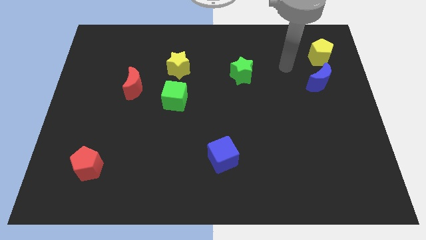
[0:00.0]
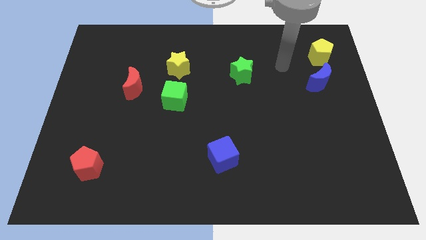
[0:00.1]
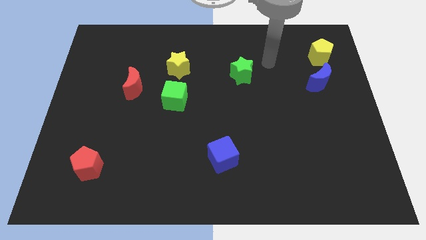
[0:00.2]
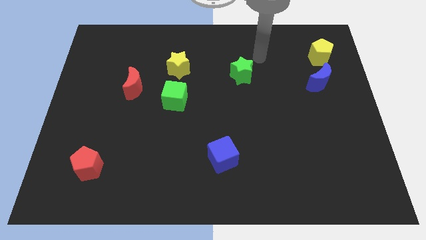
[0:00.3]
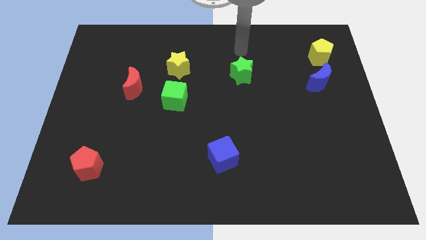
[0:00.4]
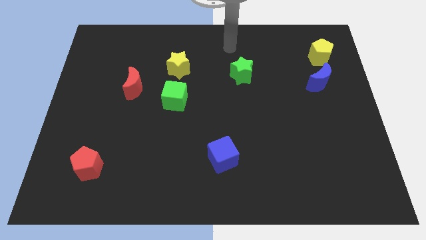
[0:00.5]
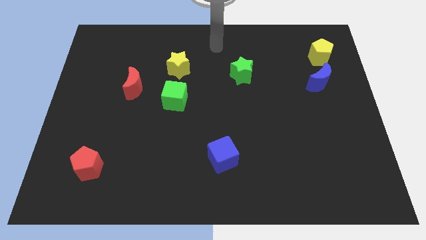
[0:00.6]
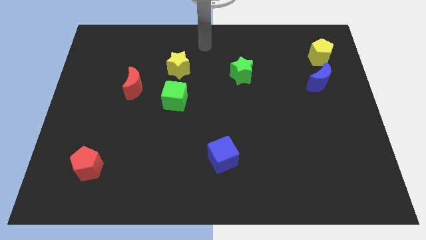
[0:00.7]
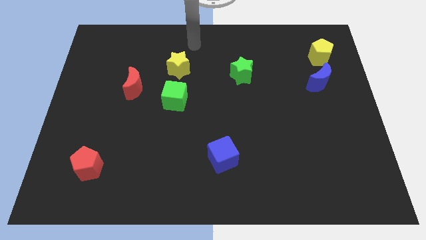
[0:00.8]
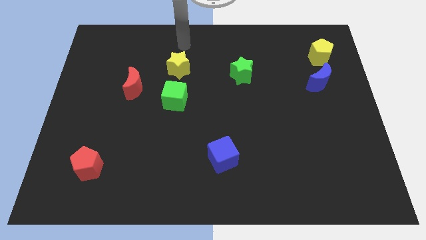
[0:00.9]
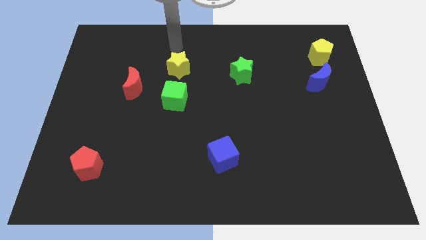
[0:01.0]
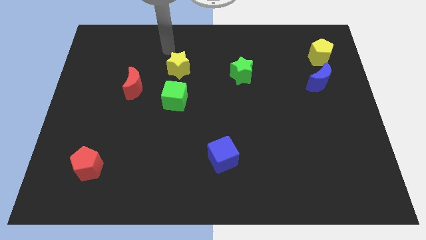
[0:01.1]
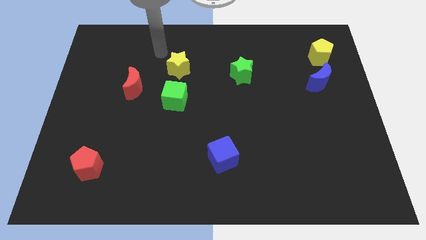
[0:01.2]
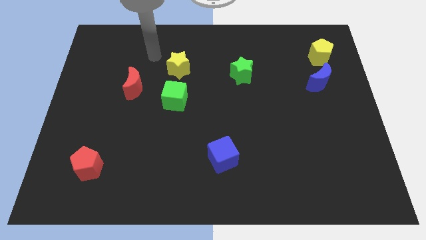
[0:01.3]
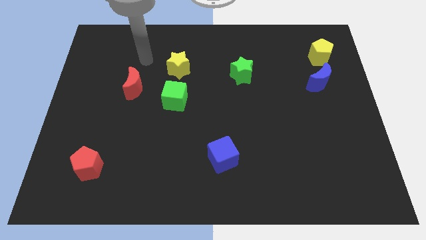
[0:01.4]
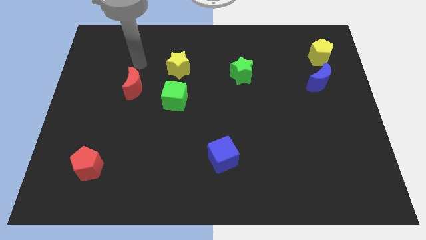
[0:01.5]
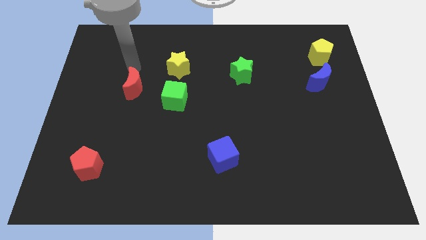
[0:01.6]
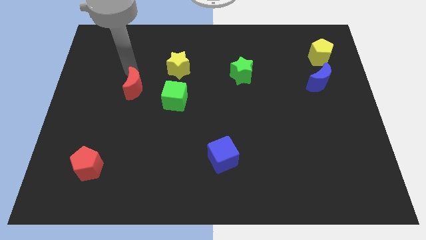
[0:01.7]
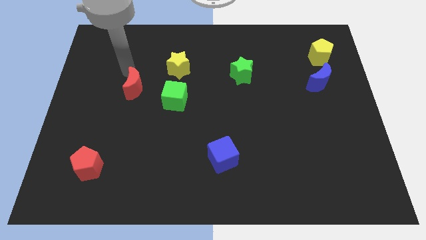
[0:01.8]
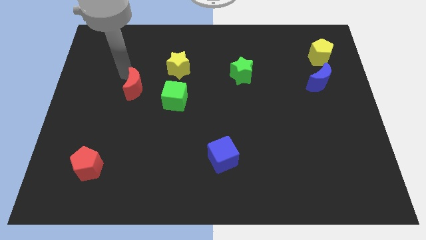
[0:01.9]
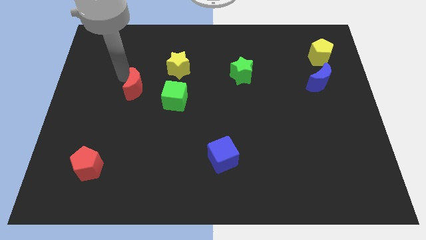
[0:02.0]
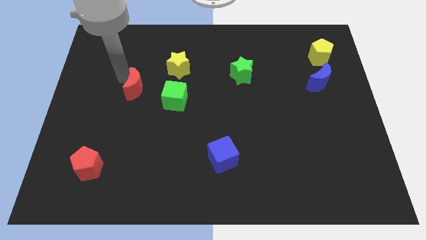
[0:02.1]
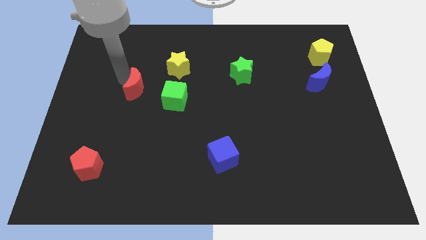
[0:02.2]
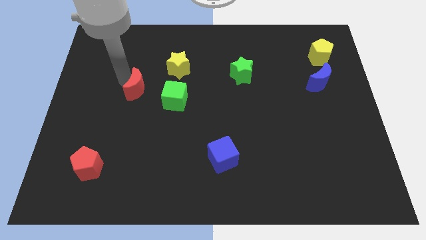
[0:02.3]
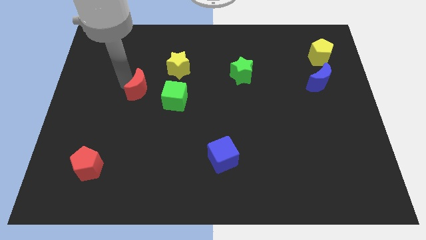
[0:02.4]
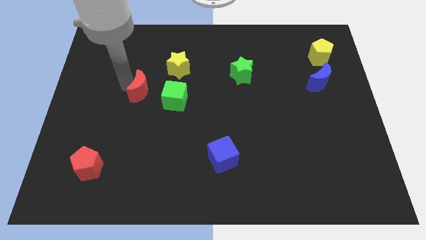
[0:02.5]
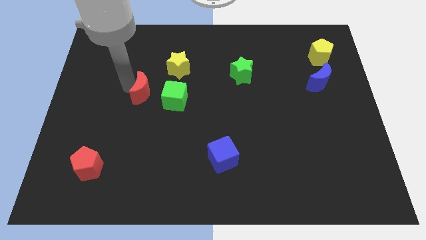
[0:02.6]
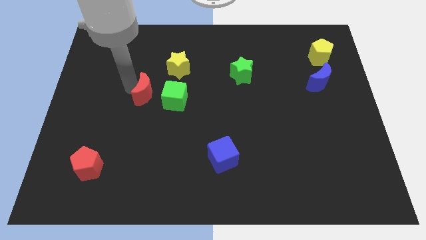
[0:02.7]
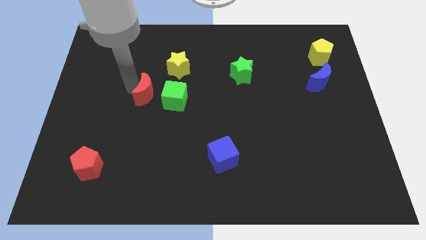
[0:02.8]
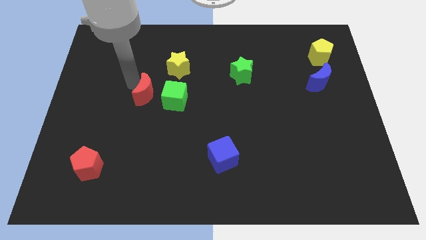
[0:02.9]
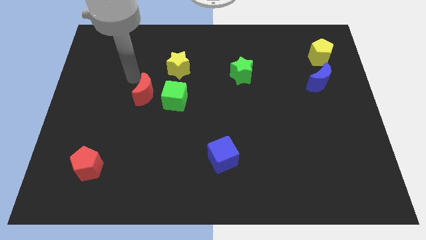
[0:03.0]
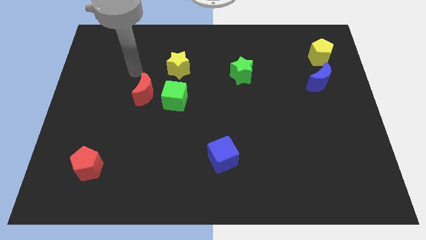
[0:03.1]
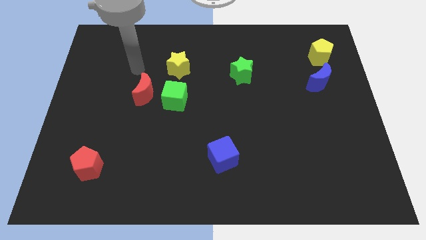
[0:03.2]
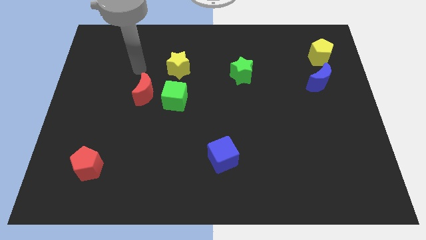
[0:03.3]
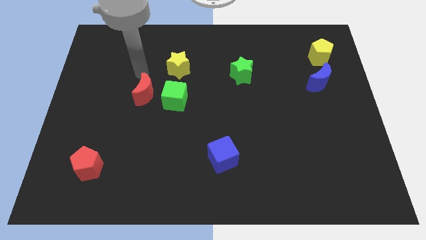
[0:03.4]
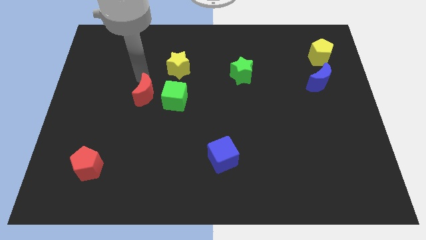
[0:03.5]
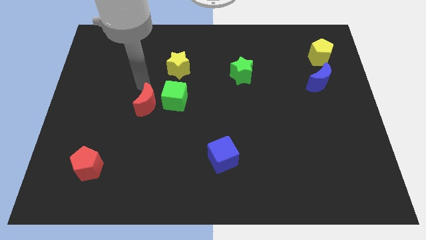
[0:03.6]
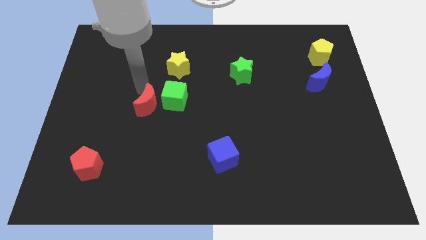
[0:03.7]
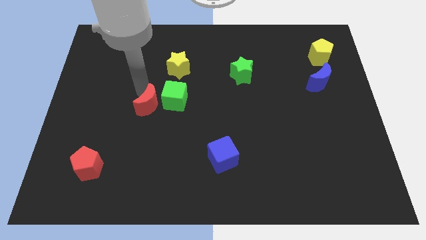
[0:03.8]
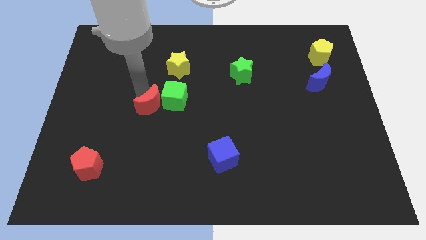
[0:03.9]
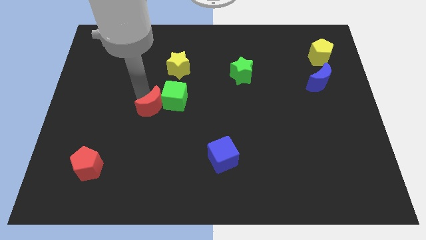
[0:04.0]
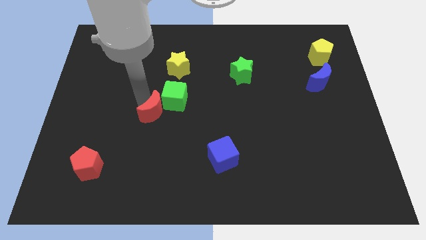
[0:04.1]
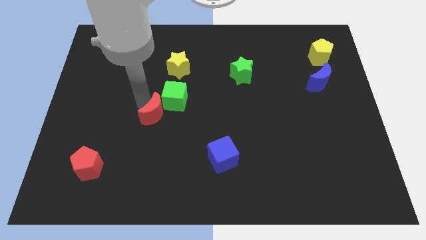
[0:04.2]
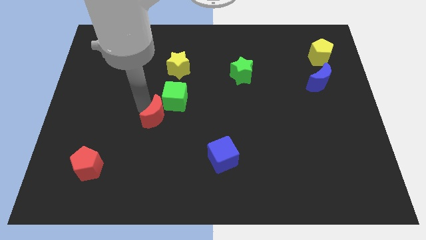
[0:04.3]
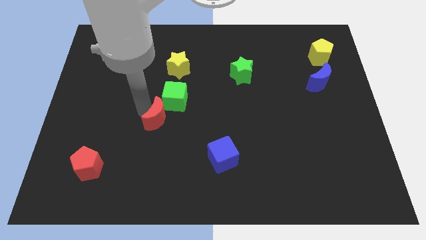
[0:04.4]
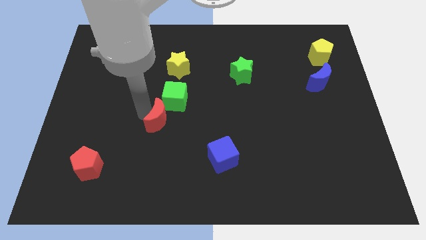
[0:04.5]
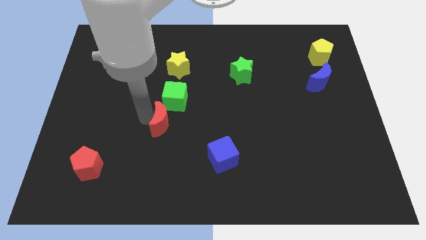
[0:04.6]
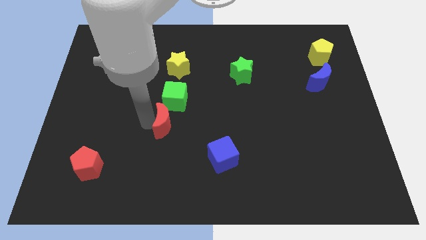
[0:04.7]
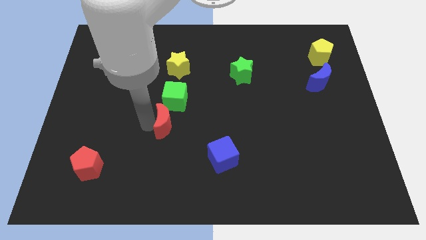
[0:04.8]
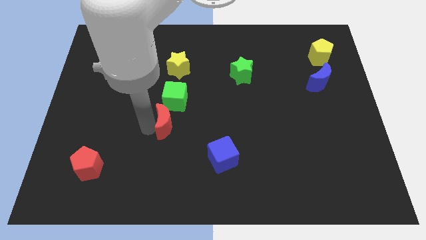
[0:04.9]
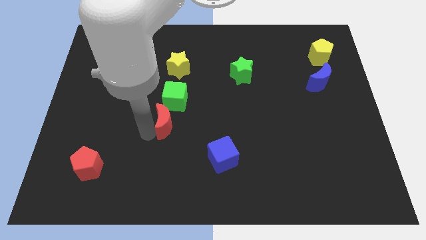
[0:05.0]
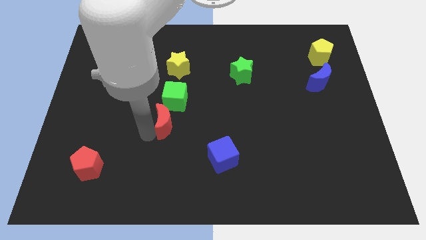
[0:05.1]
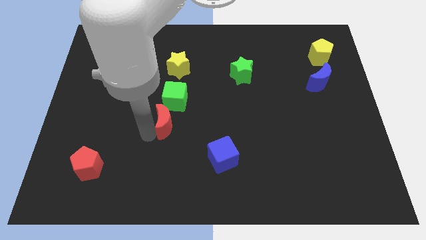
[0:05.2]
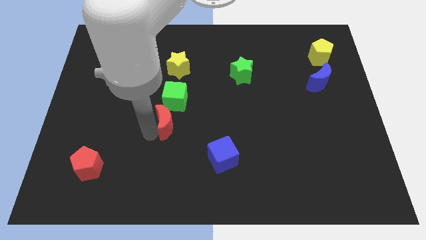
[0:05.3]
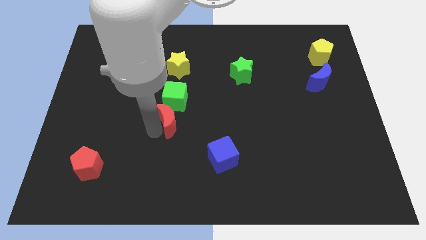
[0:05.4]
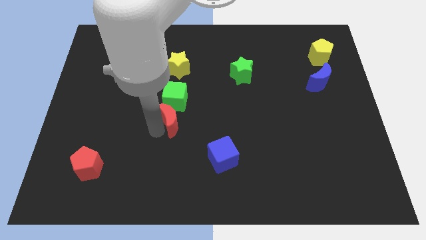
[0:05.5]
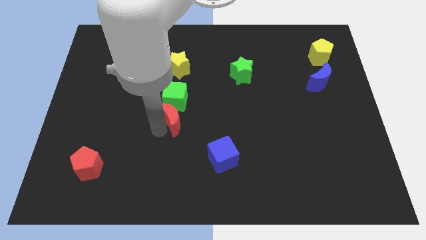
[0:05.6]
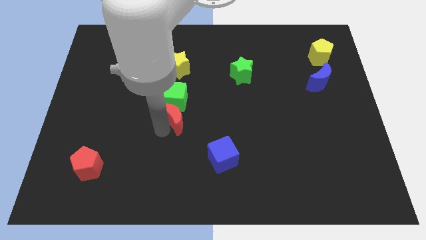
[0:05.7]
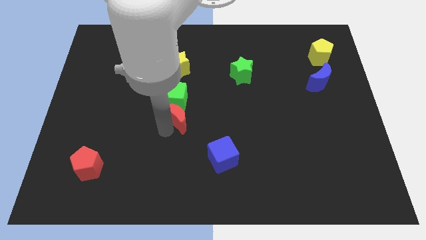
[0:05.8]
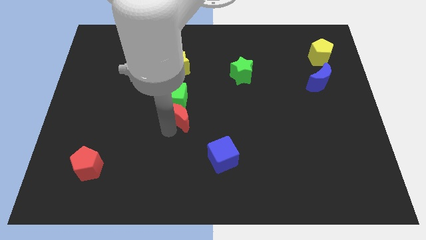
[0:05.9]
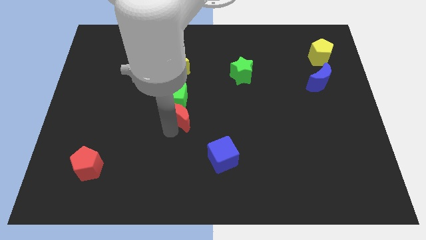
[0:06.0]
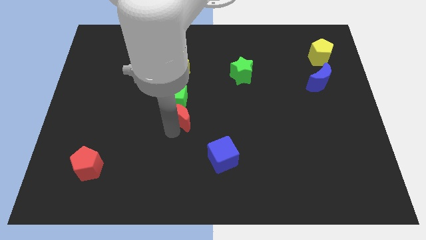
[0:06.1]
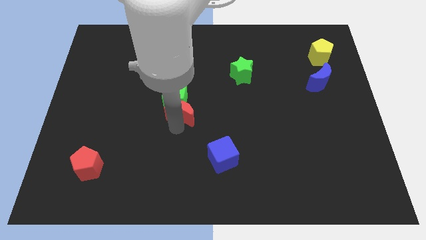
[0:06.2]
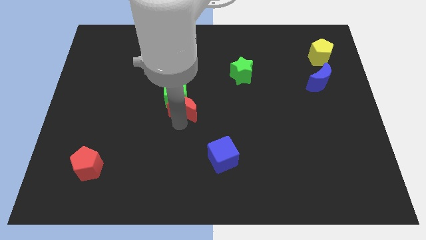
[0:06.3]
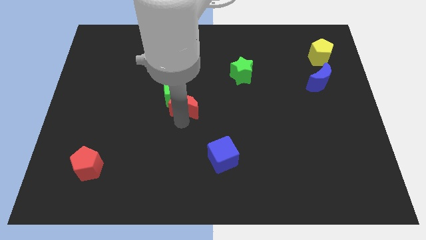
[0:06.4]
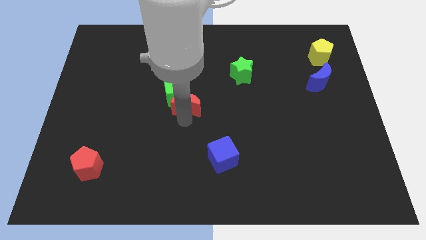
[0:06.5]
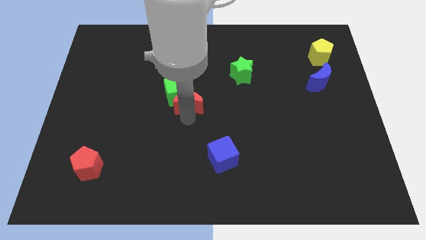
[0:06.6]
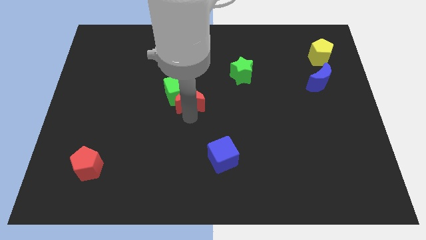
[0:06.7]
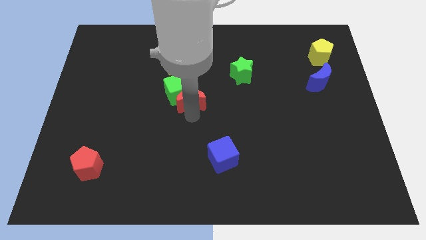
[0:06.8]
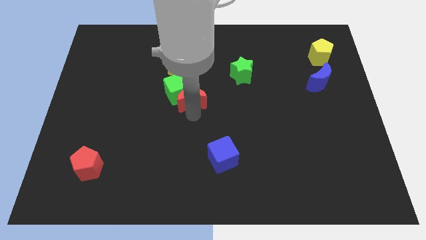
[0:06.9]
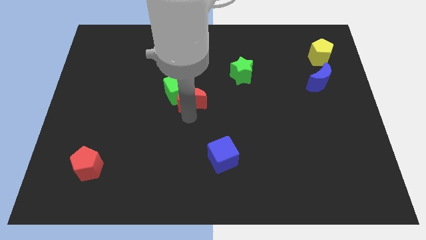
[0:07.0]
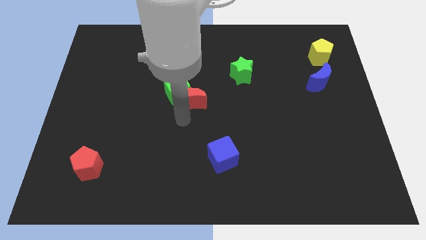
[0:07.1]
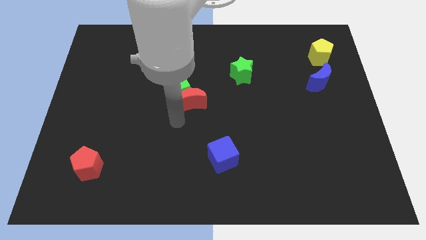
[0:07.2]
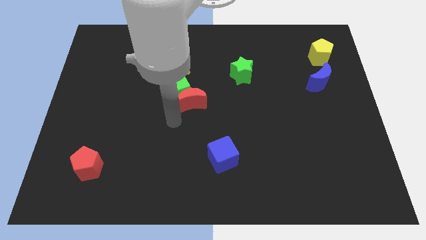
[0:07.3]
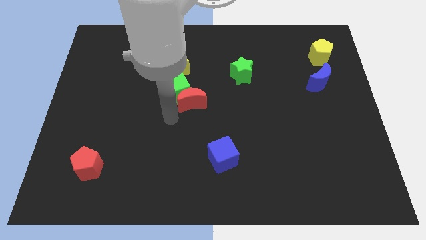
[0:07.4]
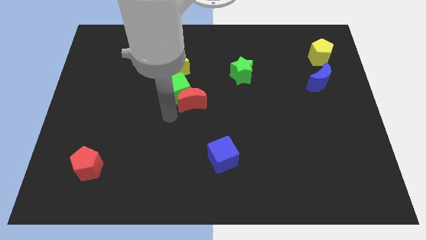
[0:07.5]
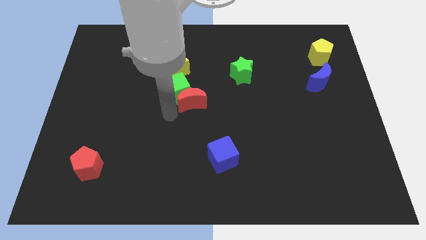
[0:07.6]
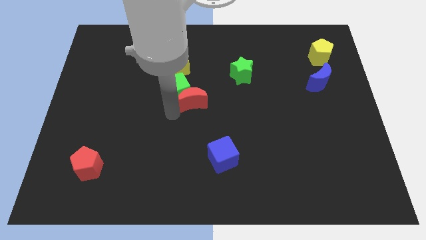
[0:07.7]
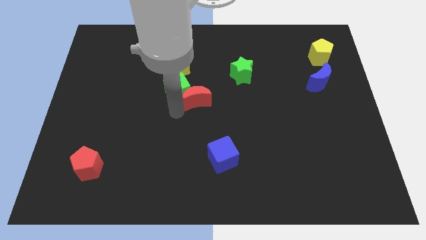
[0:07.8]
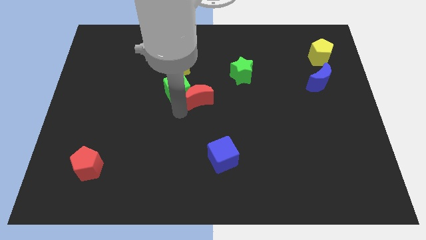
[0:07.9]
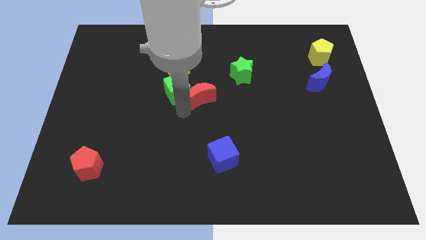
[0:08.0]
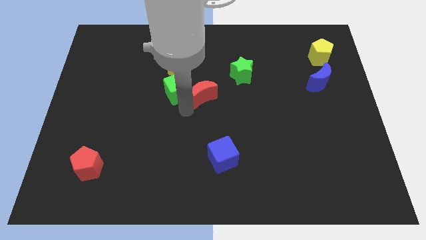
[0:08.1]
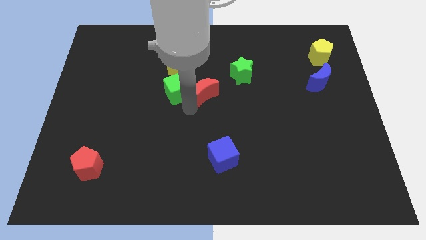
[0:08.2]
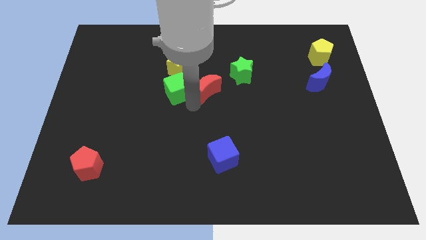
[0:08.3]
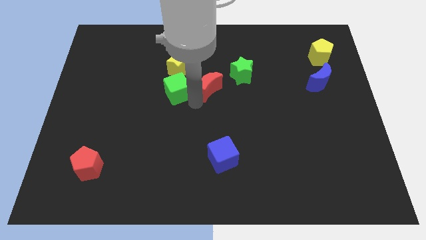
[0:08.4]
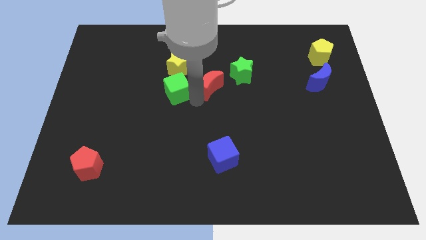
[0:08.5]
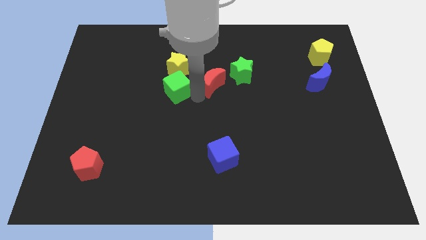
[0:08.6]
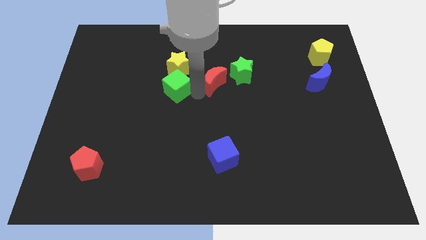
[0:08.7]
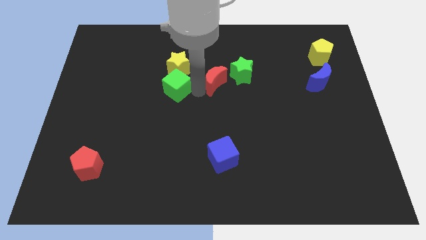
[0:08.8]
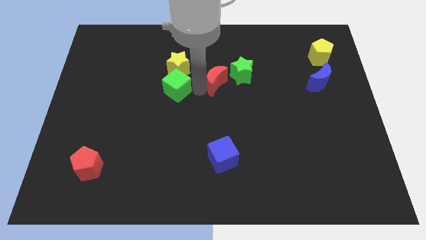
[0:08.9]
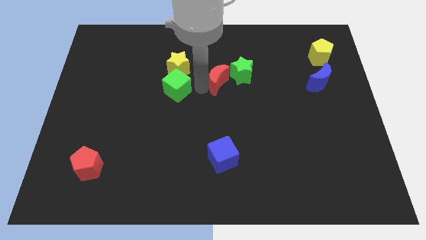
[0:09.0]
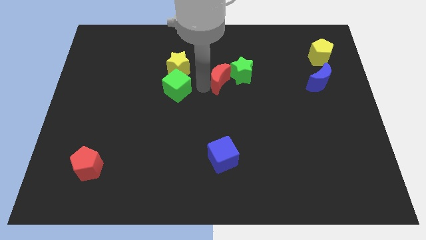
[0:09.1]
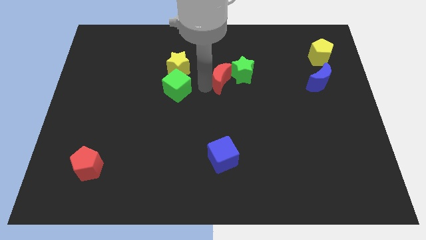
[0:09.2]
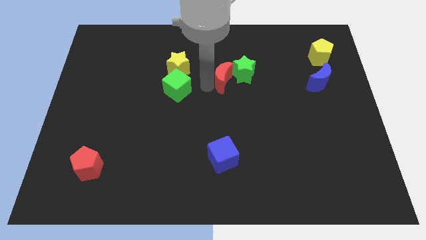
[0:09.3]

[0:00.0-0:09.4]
push the red moon towards the green star
